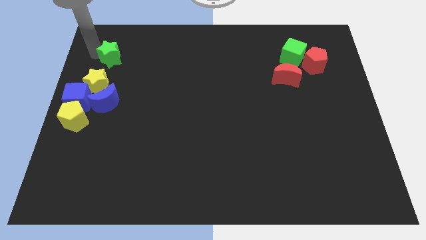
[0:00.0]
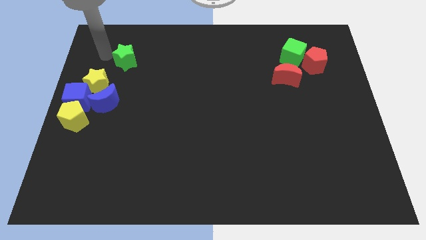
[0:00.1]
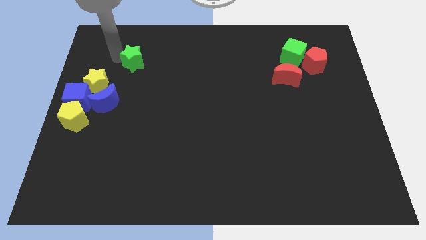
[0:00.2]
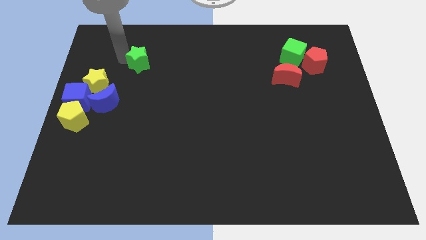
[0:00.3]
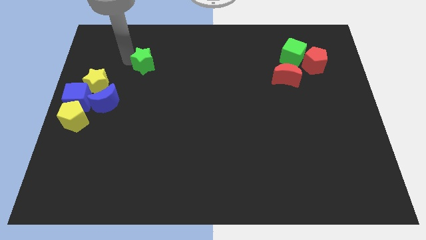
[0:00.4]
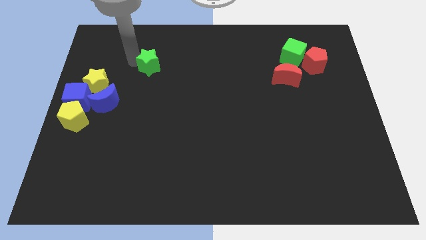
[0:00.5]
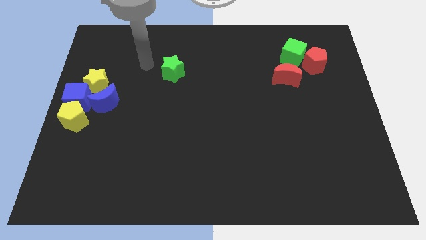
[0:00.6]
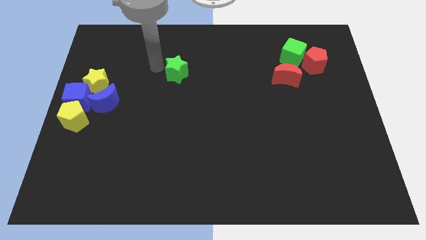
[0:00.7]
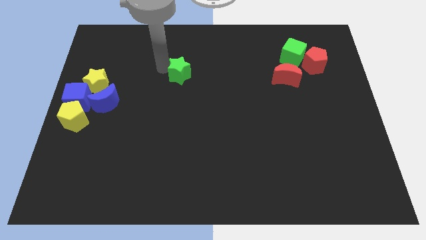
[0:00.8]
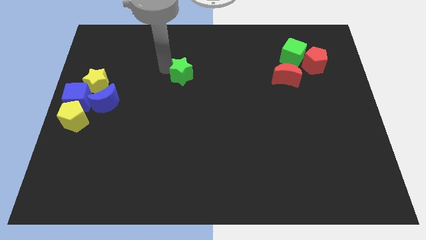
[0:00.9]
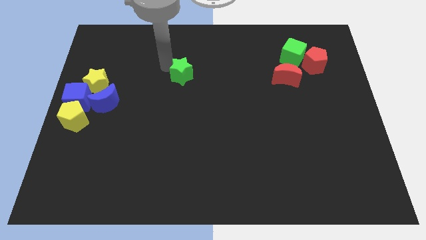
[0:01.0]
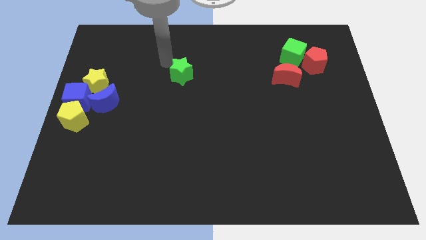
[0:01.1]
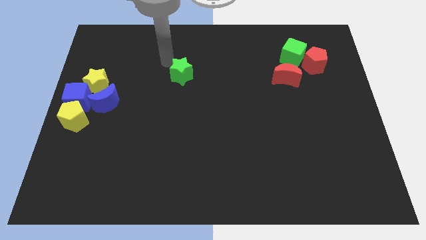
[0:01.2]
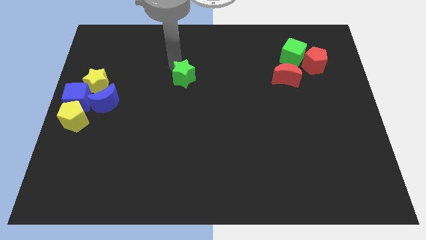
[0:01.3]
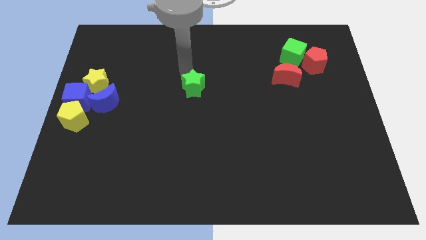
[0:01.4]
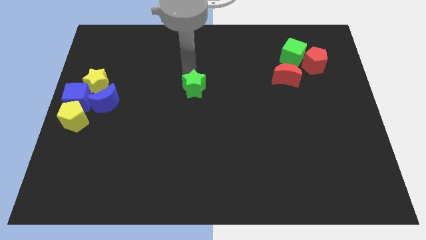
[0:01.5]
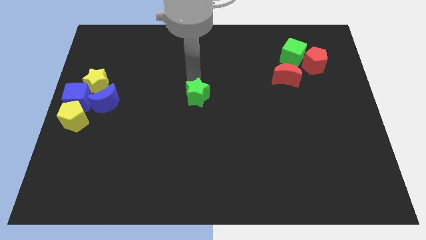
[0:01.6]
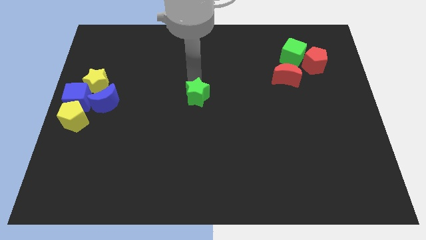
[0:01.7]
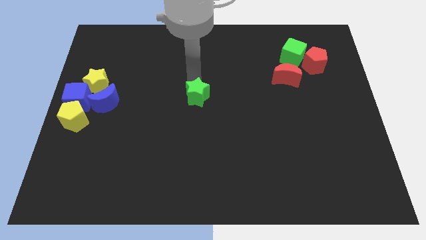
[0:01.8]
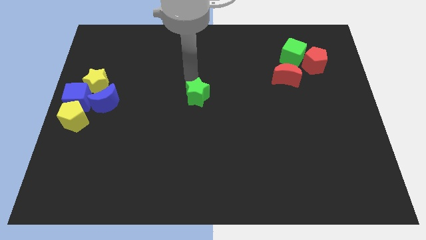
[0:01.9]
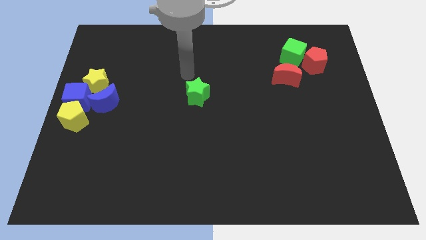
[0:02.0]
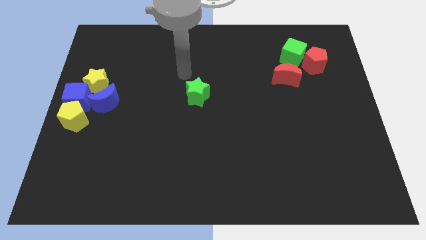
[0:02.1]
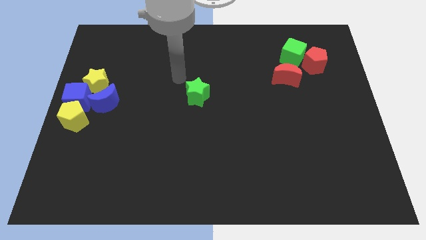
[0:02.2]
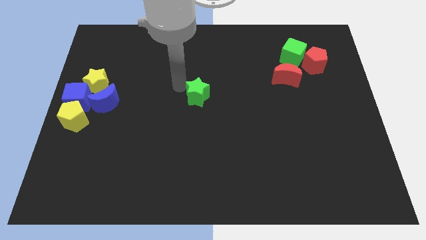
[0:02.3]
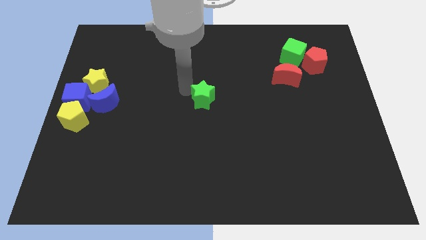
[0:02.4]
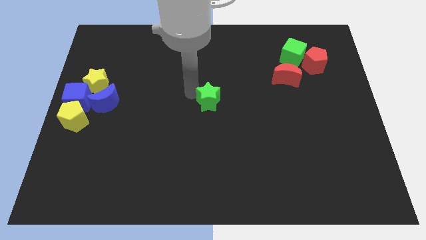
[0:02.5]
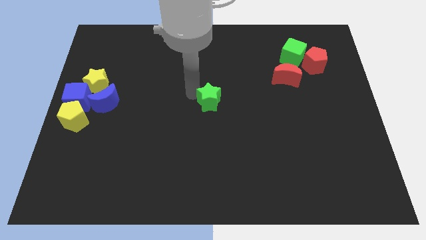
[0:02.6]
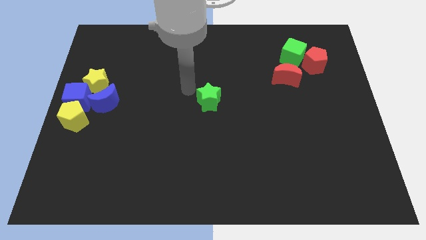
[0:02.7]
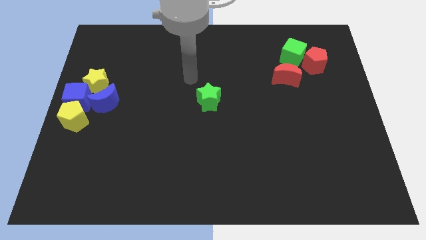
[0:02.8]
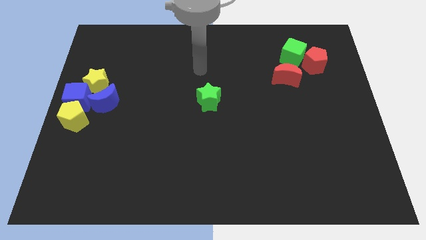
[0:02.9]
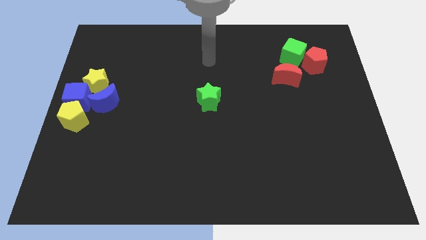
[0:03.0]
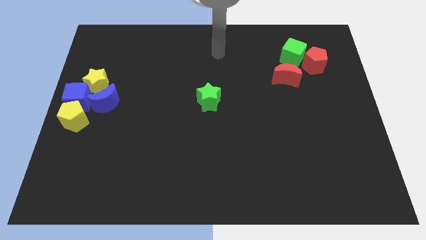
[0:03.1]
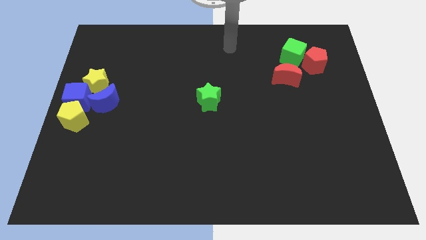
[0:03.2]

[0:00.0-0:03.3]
place the green star at the center of the board

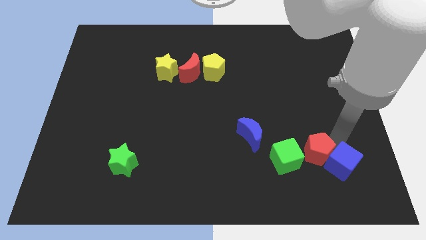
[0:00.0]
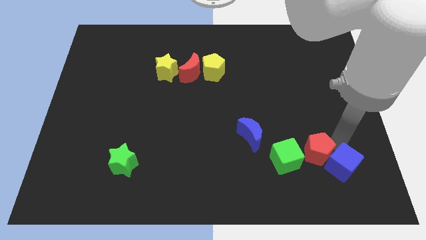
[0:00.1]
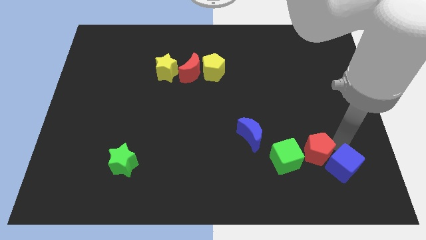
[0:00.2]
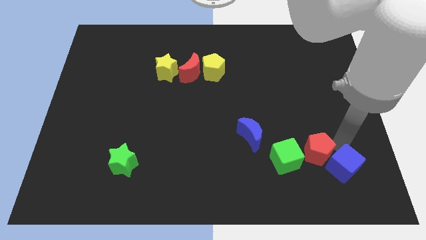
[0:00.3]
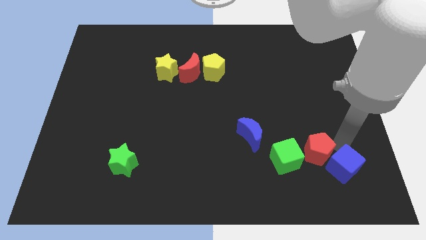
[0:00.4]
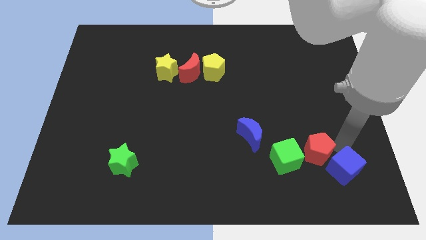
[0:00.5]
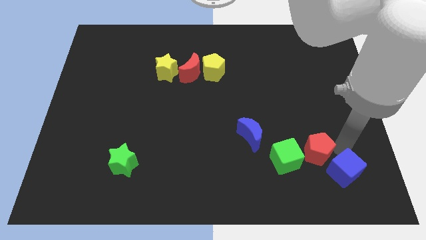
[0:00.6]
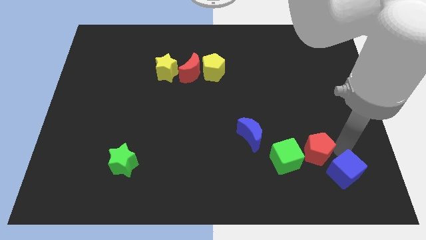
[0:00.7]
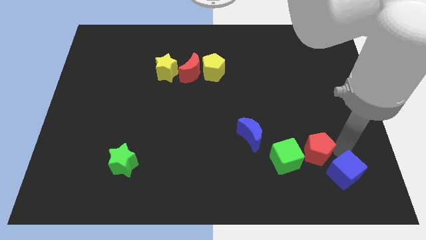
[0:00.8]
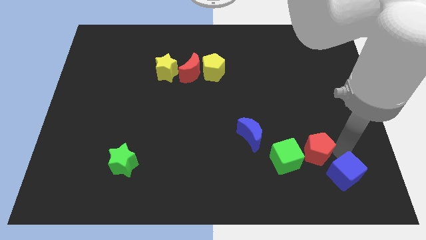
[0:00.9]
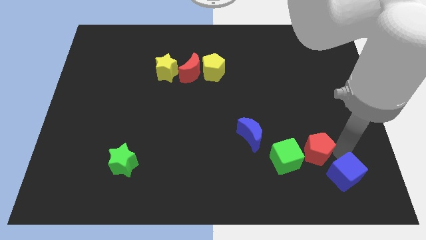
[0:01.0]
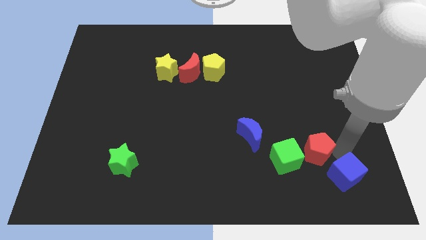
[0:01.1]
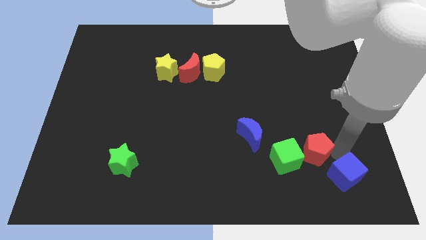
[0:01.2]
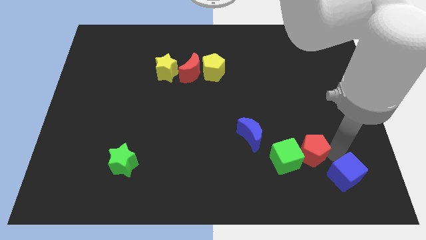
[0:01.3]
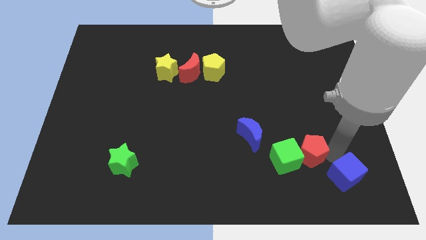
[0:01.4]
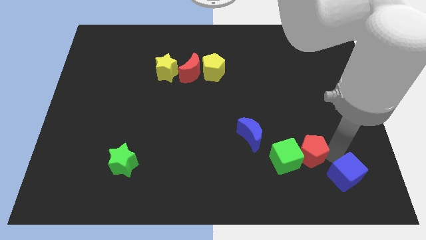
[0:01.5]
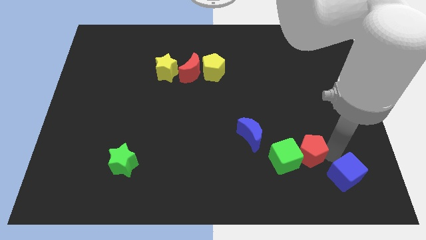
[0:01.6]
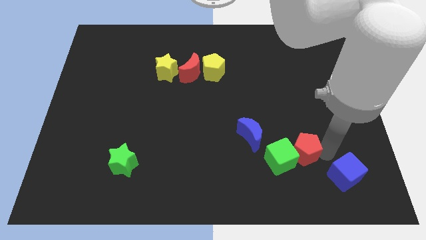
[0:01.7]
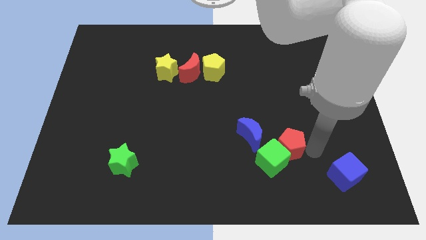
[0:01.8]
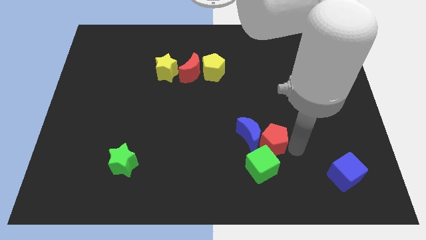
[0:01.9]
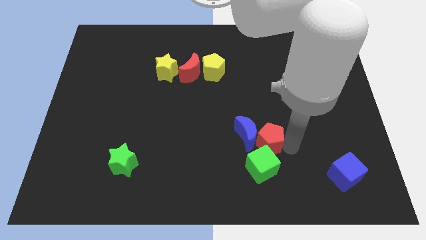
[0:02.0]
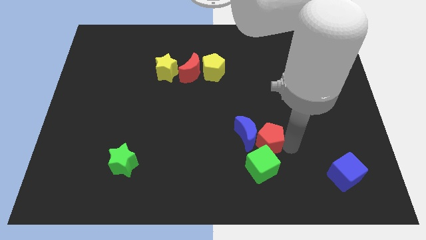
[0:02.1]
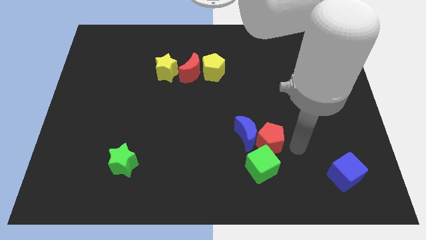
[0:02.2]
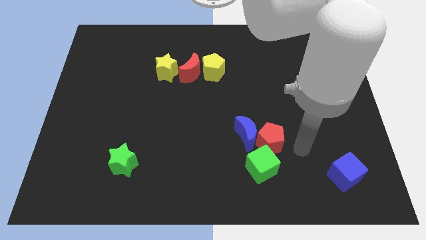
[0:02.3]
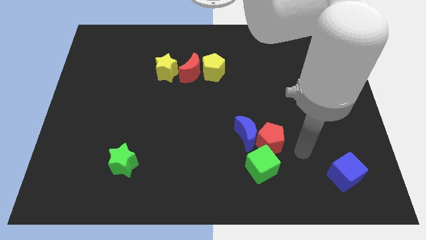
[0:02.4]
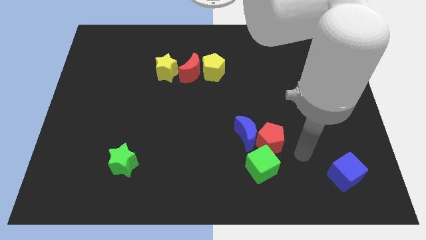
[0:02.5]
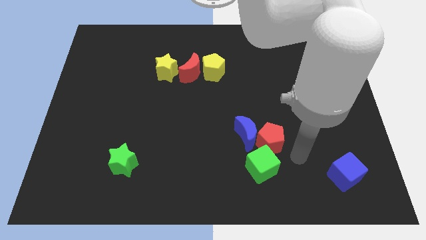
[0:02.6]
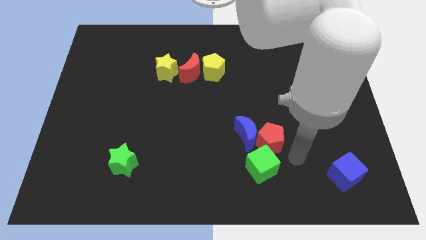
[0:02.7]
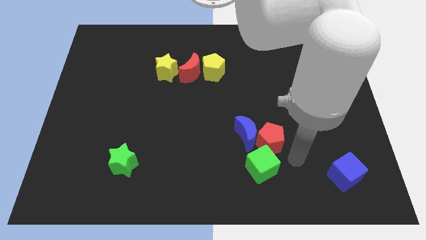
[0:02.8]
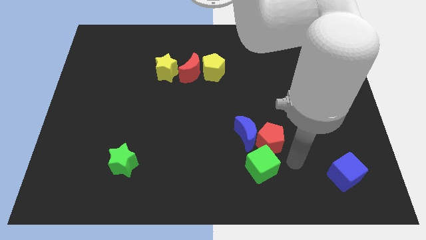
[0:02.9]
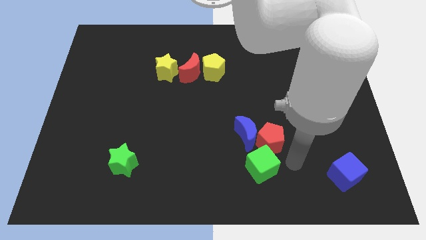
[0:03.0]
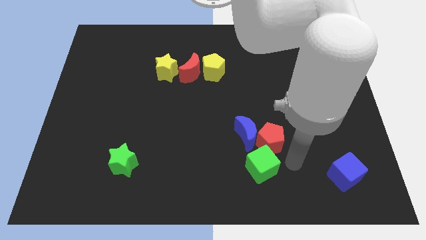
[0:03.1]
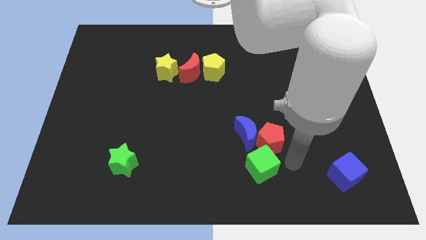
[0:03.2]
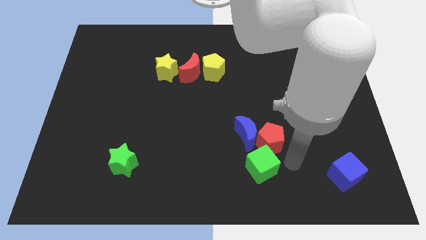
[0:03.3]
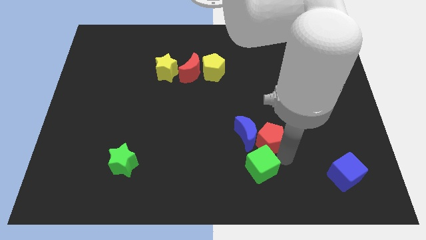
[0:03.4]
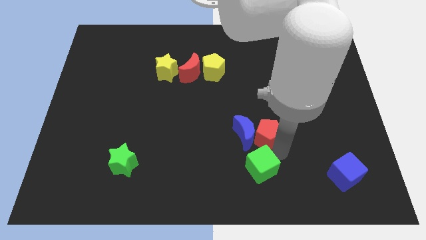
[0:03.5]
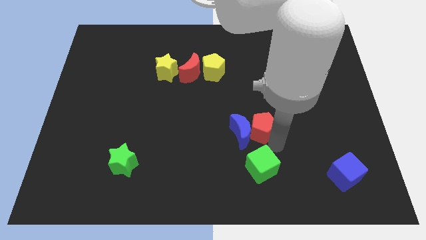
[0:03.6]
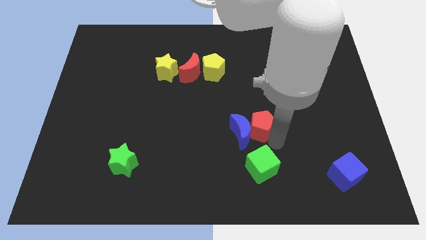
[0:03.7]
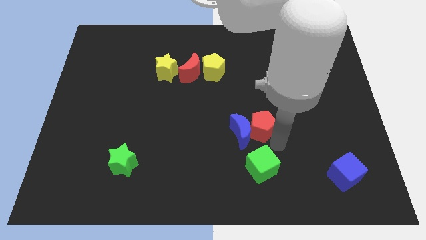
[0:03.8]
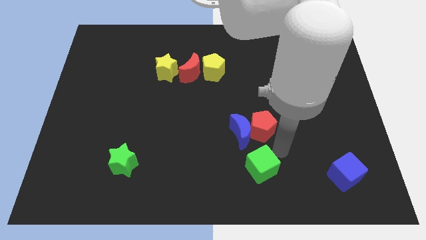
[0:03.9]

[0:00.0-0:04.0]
move the green cube with the red pentagon

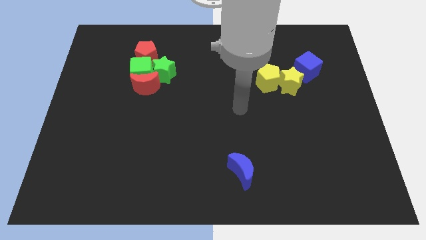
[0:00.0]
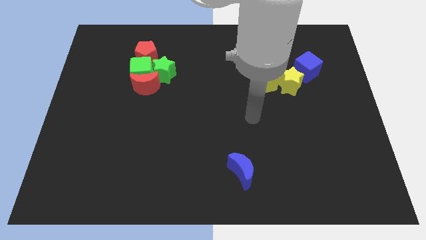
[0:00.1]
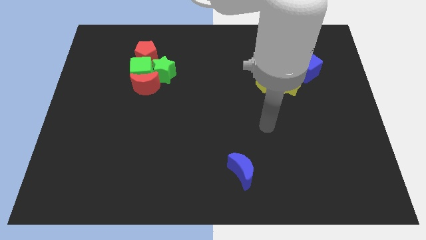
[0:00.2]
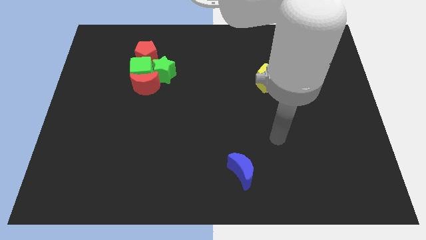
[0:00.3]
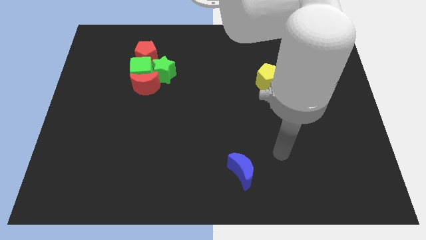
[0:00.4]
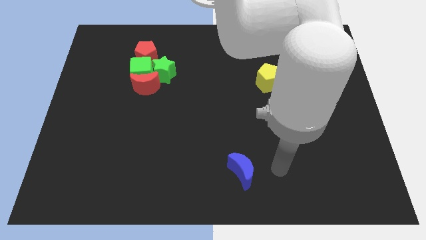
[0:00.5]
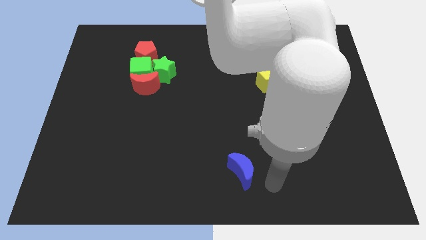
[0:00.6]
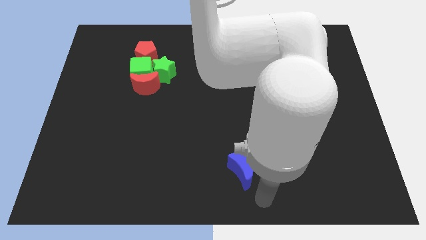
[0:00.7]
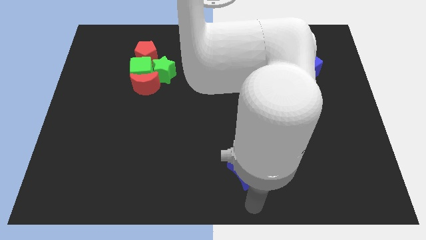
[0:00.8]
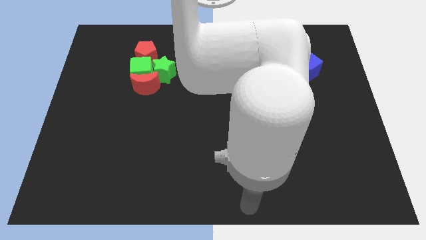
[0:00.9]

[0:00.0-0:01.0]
move your arm to the bottom center

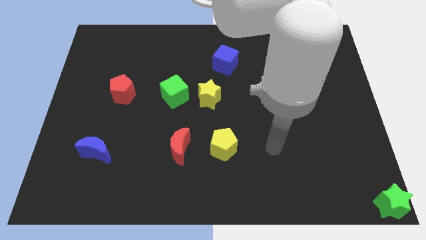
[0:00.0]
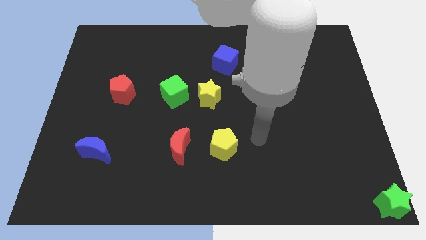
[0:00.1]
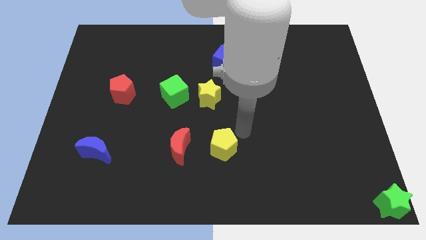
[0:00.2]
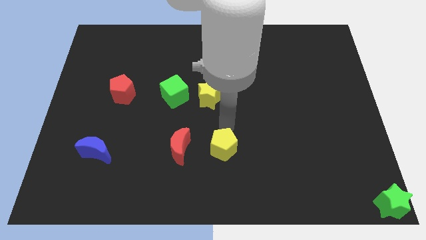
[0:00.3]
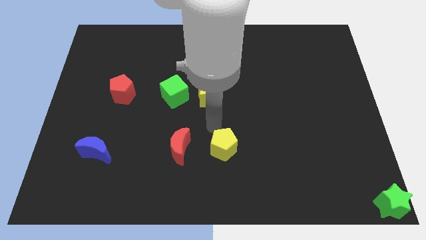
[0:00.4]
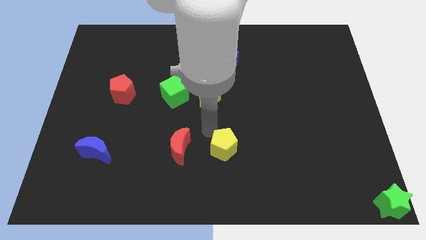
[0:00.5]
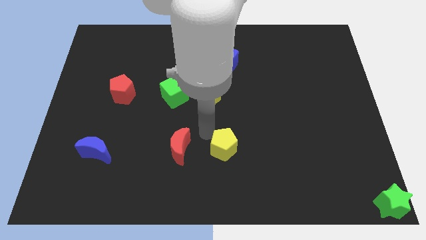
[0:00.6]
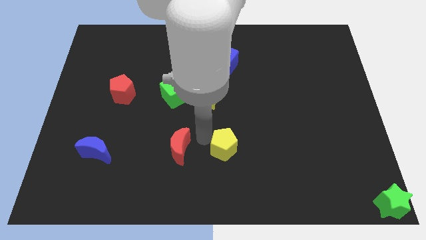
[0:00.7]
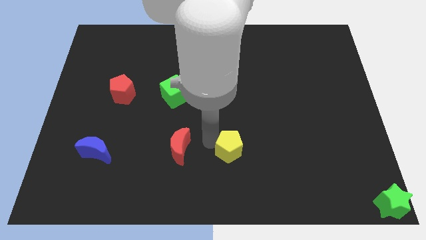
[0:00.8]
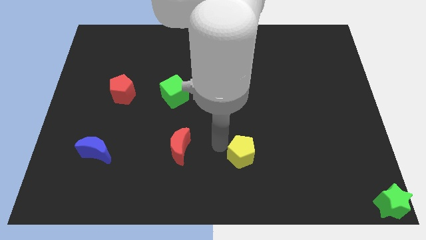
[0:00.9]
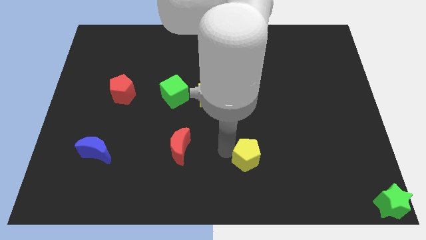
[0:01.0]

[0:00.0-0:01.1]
place the yellow pentagon towards bottom center
